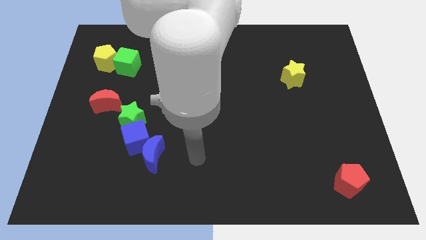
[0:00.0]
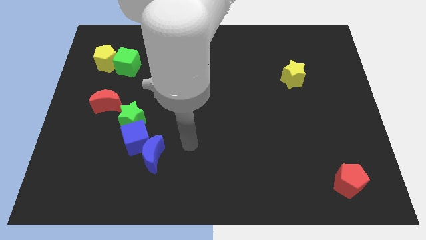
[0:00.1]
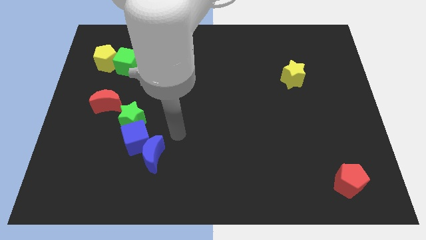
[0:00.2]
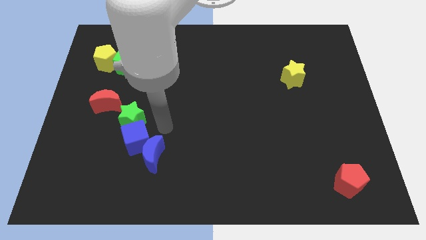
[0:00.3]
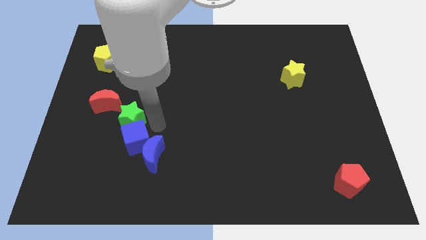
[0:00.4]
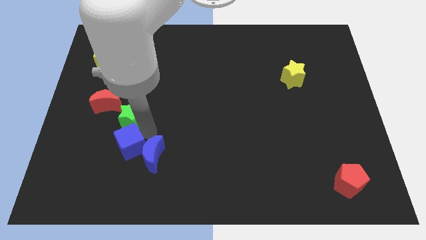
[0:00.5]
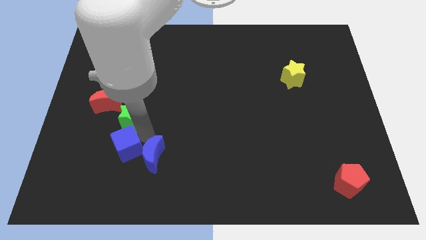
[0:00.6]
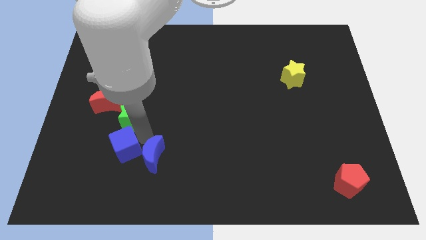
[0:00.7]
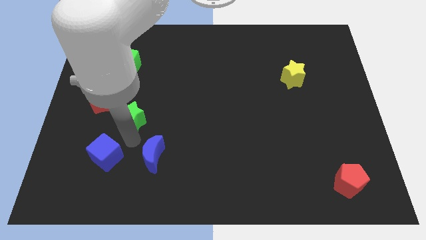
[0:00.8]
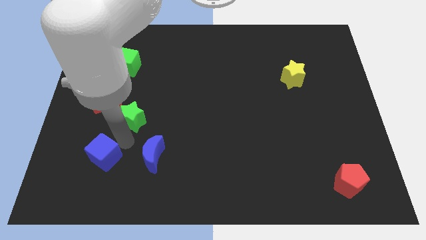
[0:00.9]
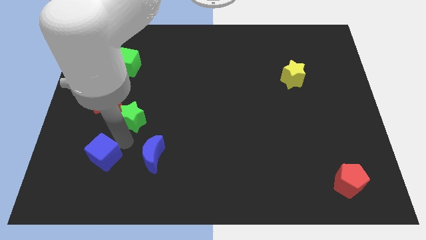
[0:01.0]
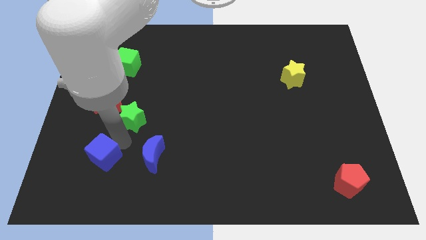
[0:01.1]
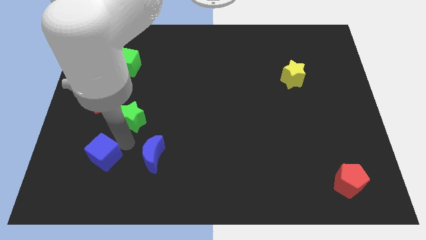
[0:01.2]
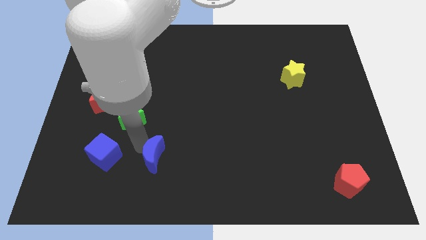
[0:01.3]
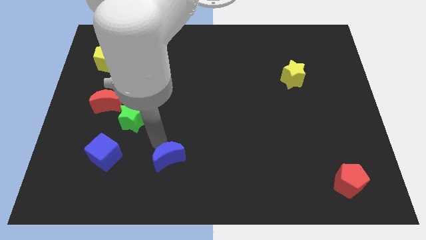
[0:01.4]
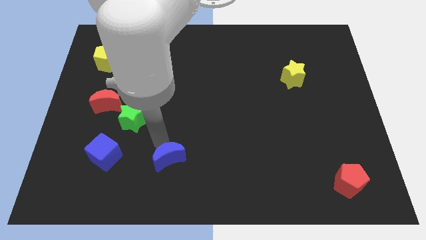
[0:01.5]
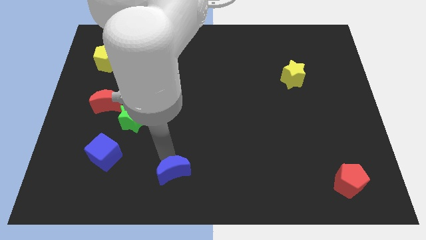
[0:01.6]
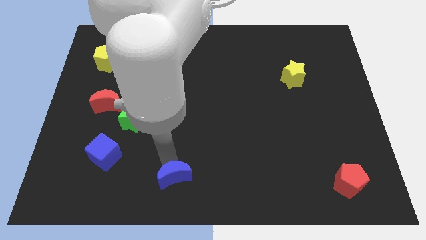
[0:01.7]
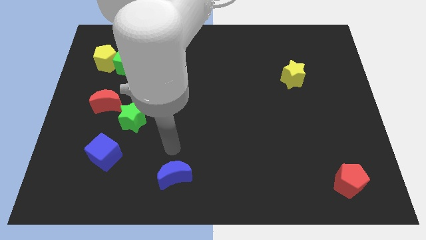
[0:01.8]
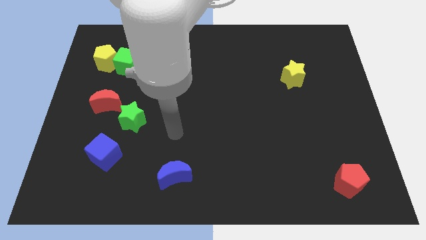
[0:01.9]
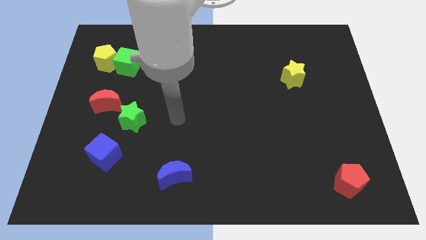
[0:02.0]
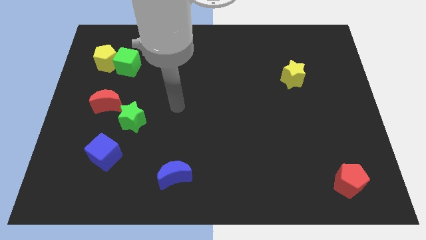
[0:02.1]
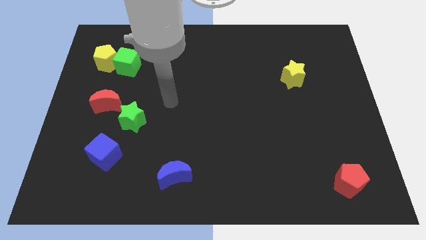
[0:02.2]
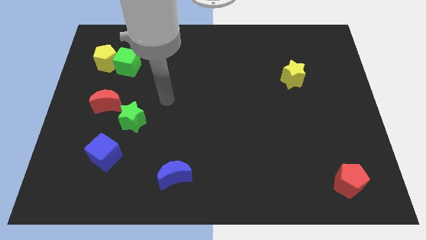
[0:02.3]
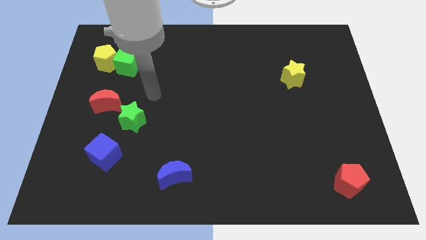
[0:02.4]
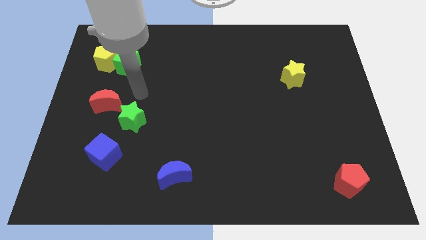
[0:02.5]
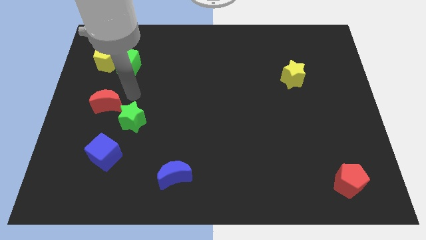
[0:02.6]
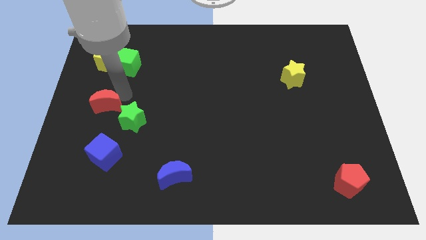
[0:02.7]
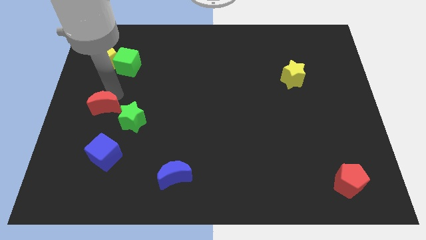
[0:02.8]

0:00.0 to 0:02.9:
place the arm above the red moon

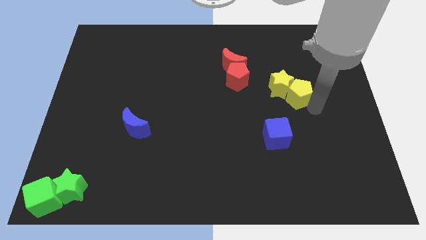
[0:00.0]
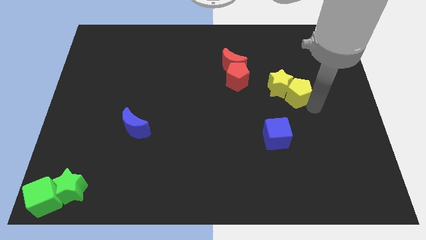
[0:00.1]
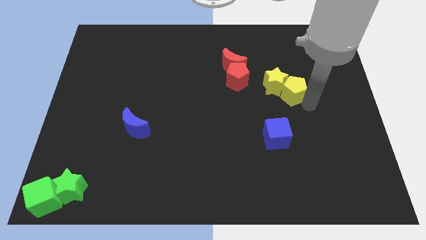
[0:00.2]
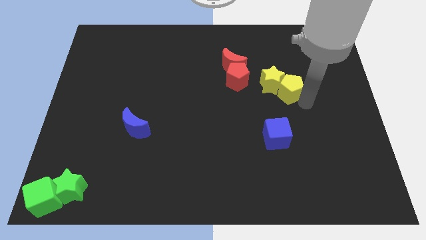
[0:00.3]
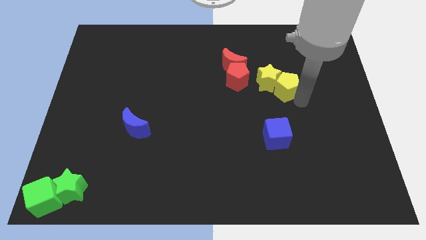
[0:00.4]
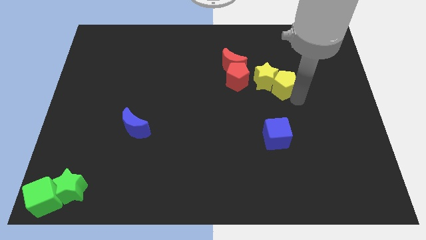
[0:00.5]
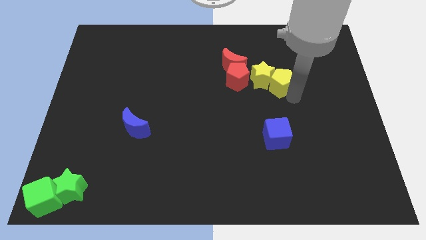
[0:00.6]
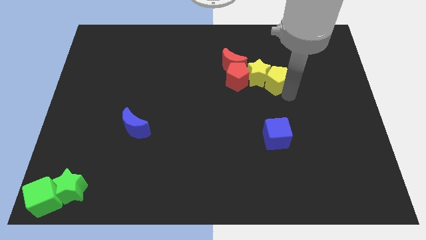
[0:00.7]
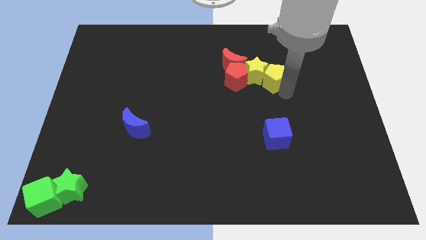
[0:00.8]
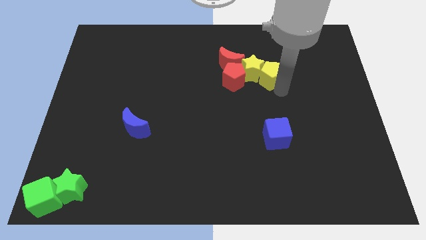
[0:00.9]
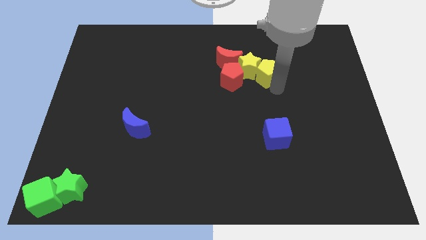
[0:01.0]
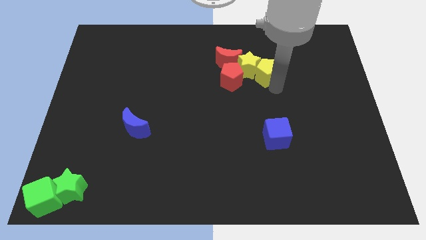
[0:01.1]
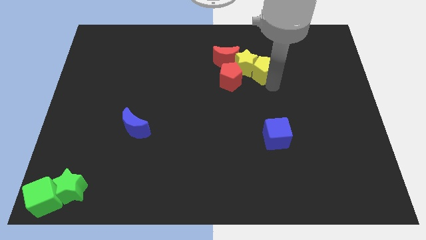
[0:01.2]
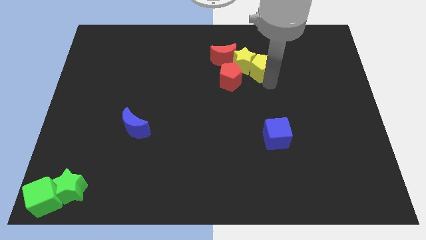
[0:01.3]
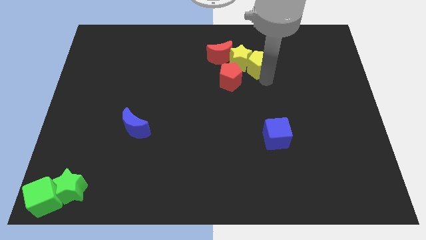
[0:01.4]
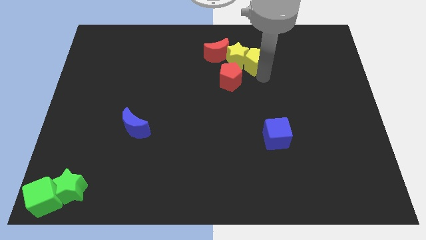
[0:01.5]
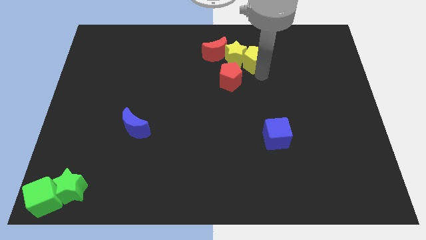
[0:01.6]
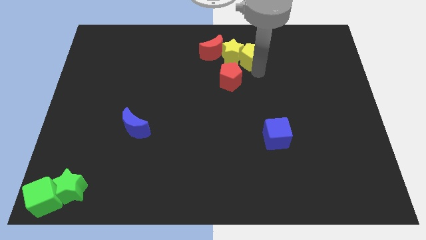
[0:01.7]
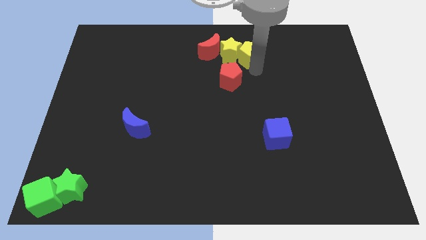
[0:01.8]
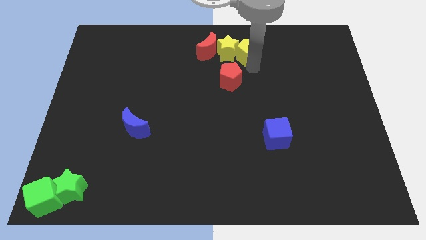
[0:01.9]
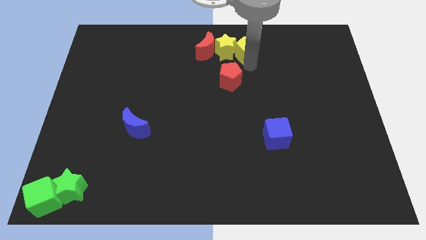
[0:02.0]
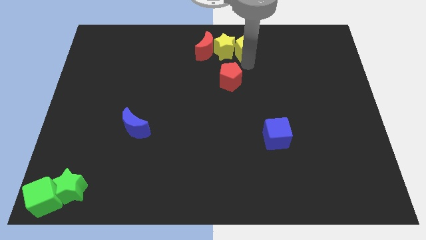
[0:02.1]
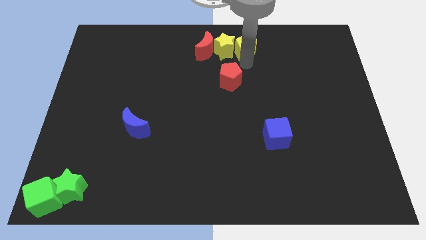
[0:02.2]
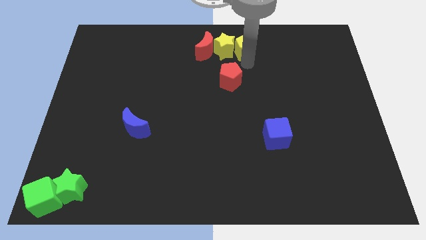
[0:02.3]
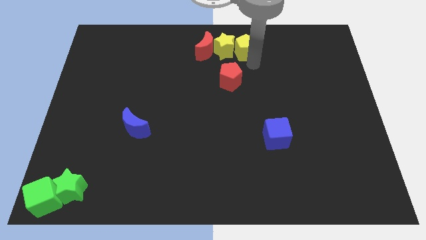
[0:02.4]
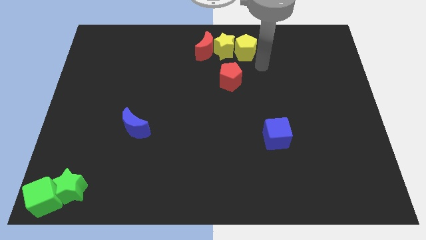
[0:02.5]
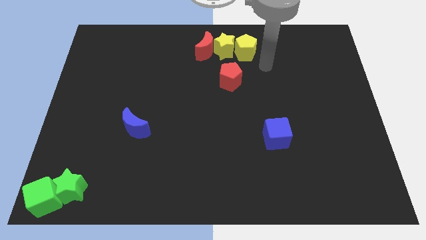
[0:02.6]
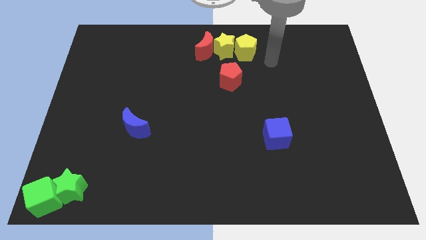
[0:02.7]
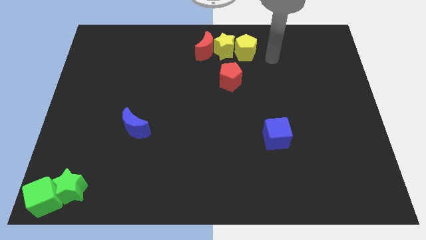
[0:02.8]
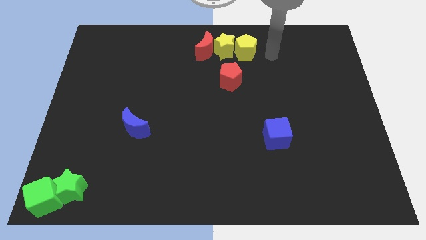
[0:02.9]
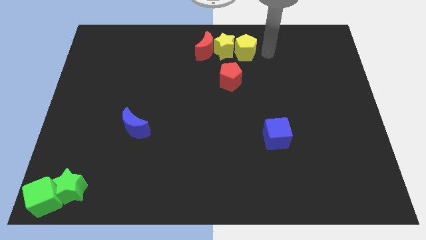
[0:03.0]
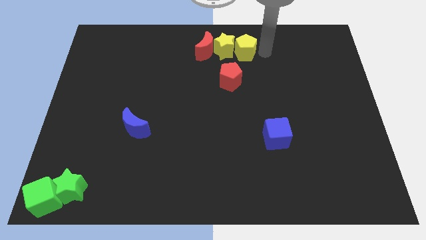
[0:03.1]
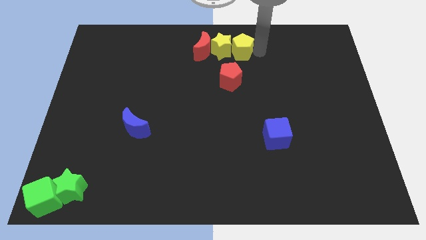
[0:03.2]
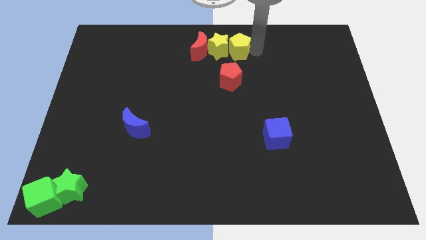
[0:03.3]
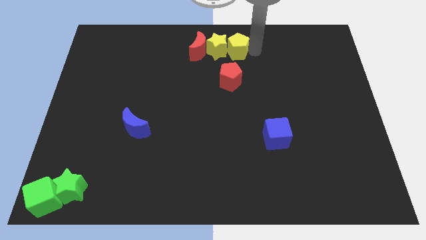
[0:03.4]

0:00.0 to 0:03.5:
put the yellow blocks into the red moon

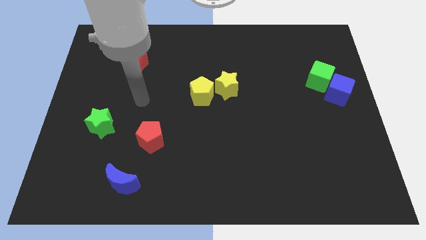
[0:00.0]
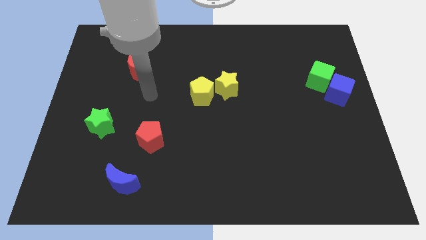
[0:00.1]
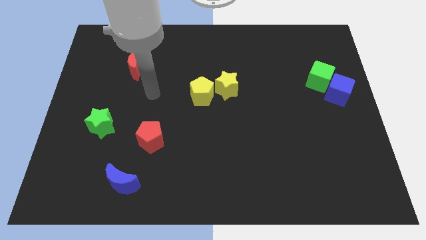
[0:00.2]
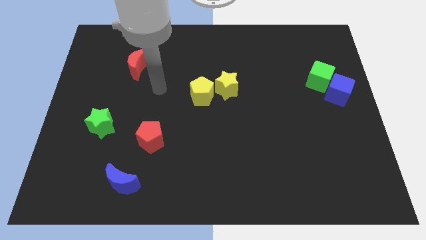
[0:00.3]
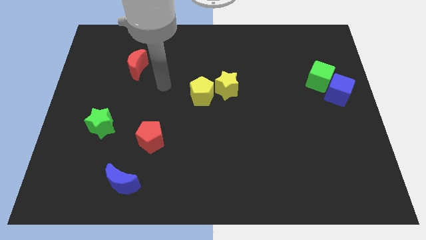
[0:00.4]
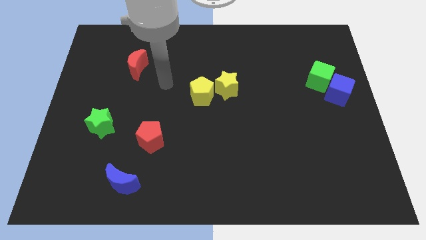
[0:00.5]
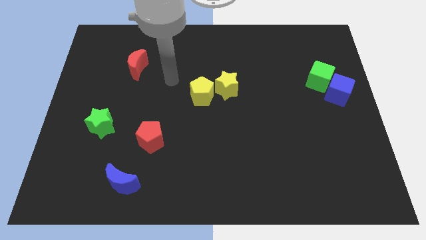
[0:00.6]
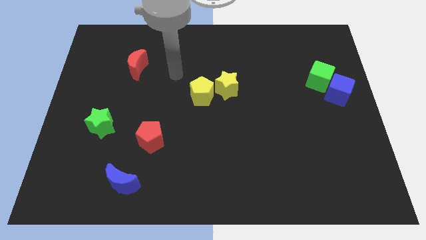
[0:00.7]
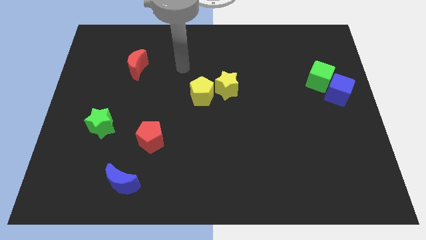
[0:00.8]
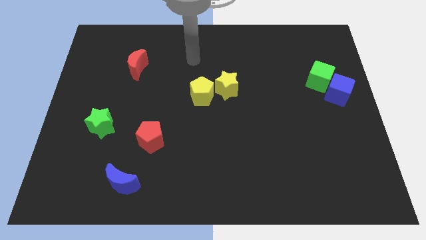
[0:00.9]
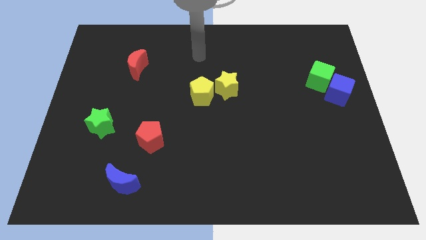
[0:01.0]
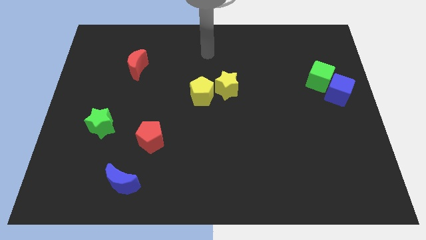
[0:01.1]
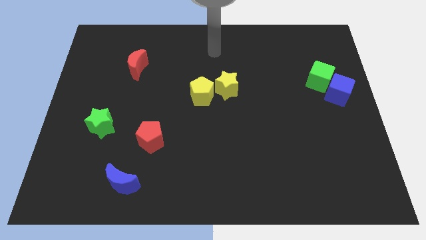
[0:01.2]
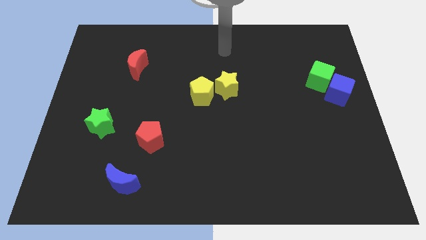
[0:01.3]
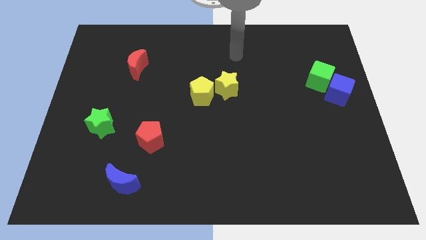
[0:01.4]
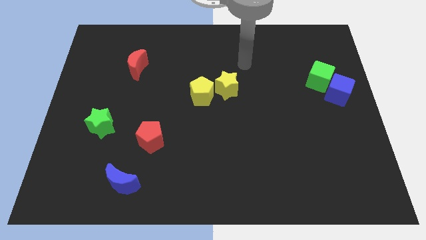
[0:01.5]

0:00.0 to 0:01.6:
move the arm over the yellow star

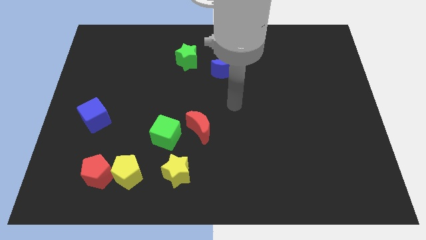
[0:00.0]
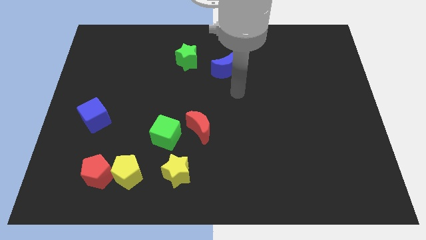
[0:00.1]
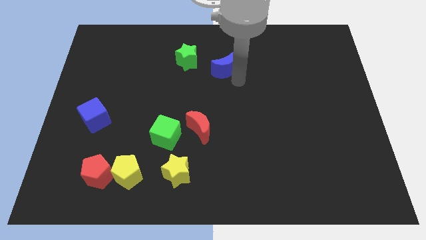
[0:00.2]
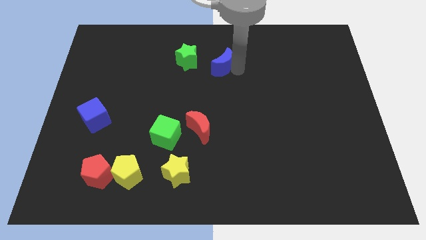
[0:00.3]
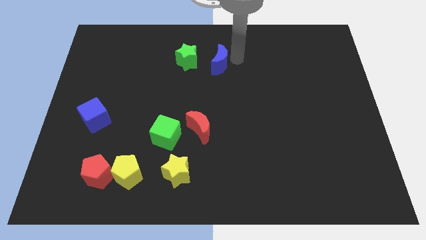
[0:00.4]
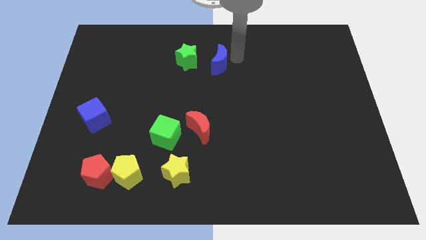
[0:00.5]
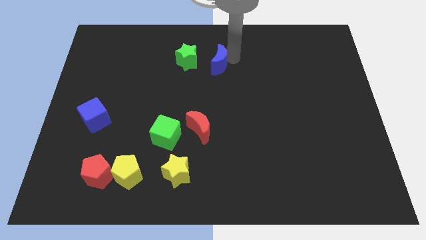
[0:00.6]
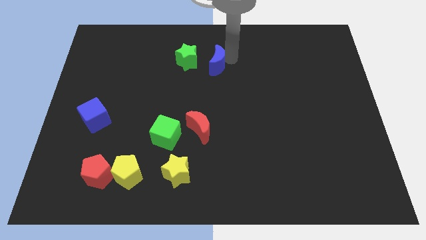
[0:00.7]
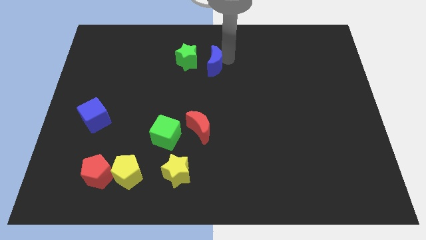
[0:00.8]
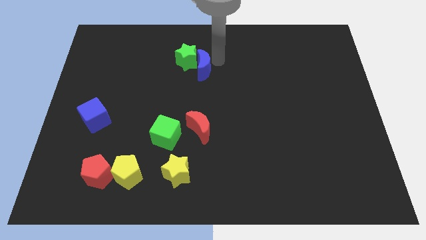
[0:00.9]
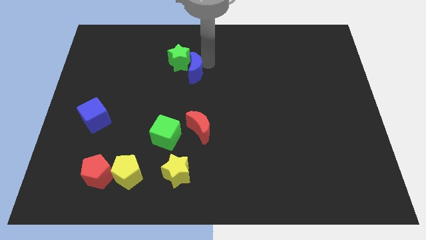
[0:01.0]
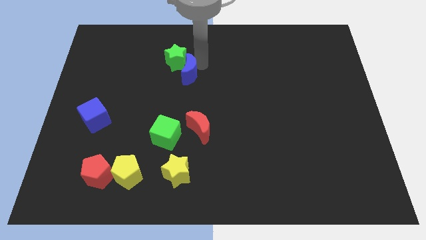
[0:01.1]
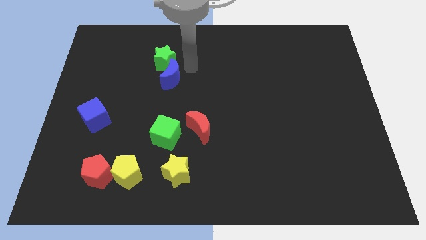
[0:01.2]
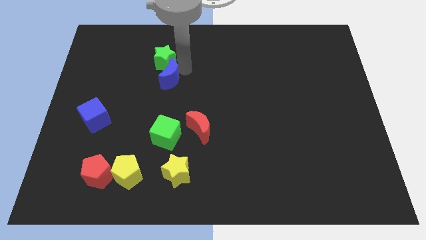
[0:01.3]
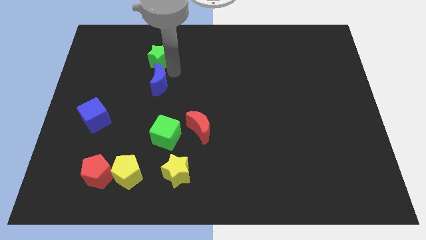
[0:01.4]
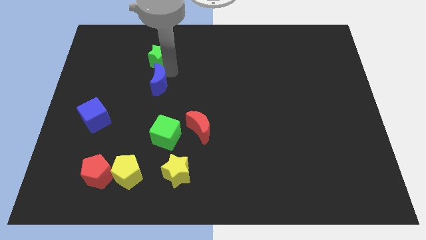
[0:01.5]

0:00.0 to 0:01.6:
push blue crescent along with green star towards left
